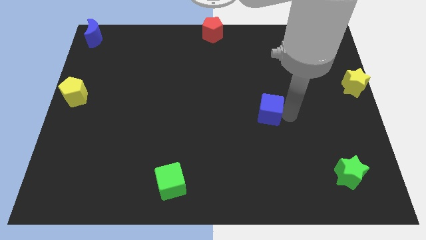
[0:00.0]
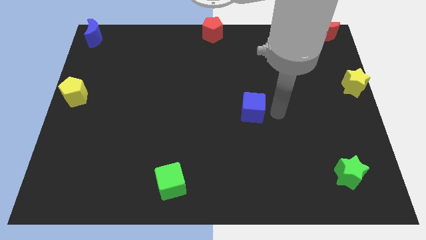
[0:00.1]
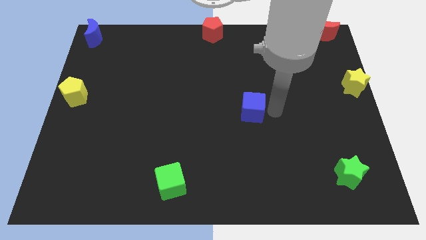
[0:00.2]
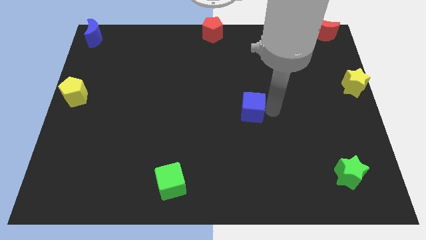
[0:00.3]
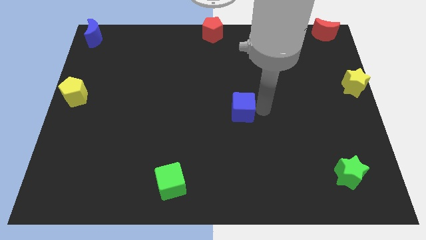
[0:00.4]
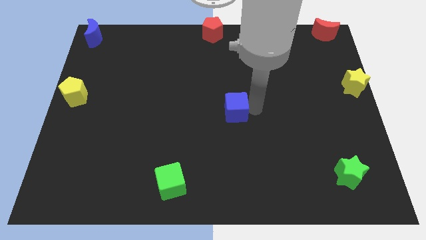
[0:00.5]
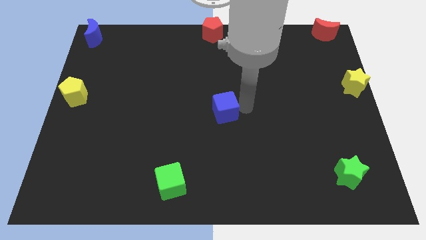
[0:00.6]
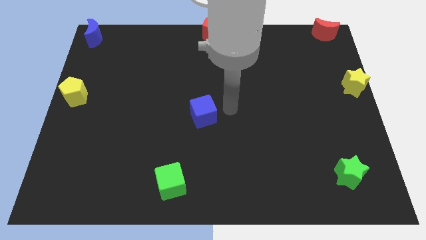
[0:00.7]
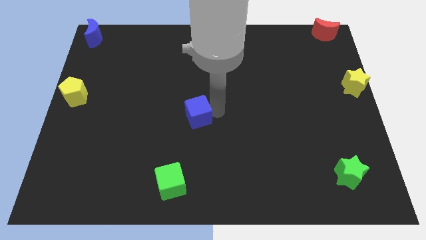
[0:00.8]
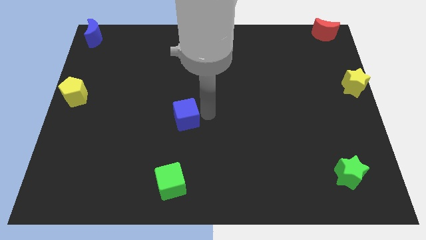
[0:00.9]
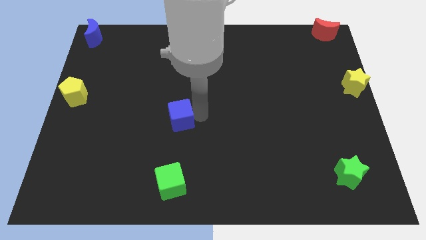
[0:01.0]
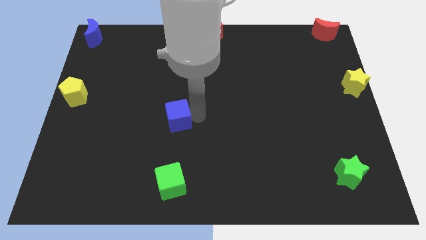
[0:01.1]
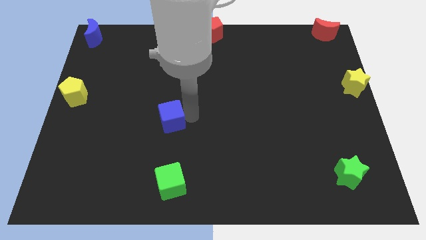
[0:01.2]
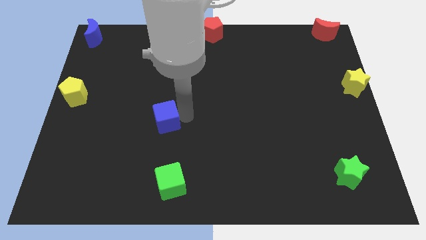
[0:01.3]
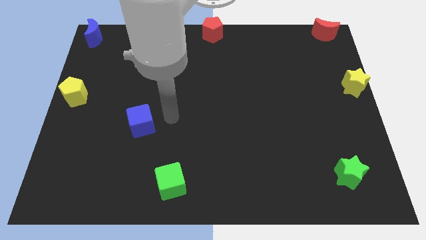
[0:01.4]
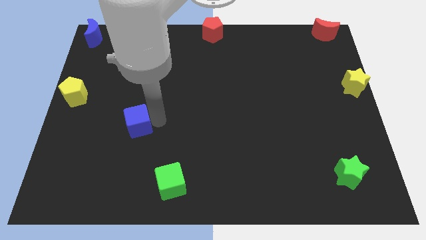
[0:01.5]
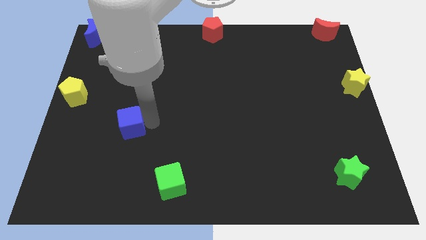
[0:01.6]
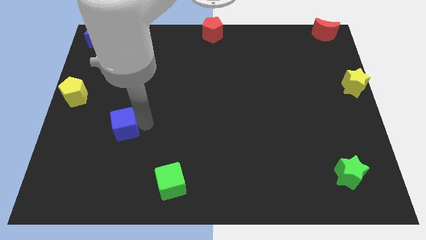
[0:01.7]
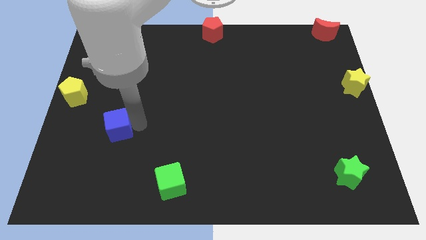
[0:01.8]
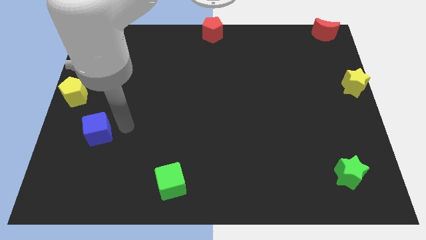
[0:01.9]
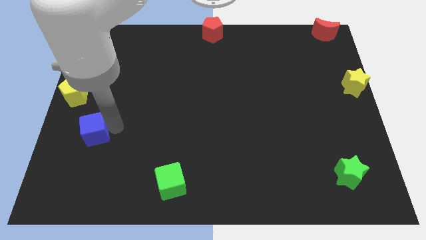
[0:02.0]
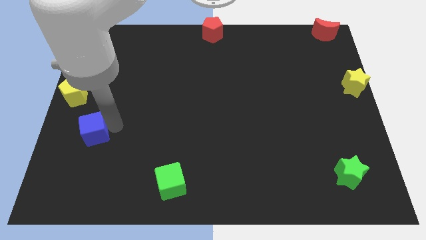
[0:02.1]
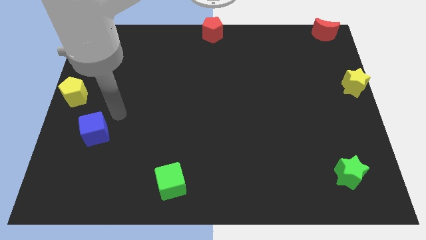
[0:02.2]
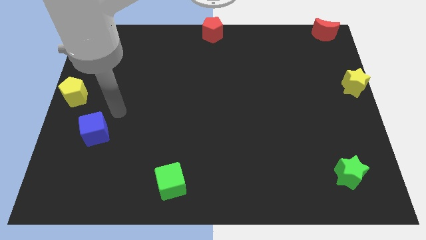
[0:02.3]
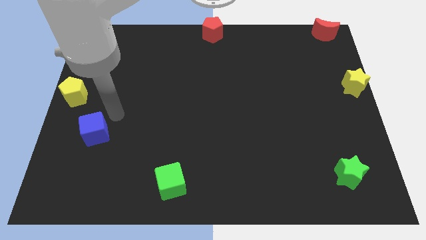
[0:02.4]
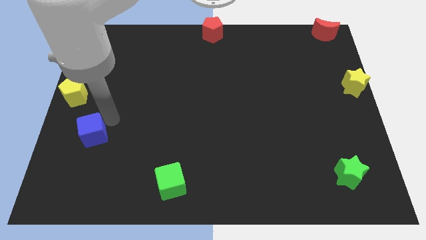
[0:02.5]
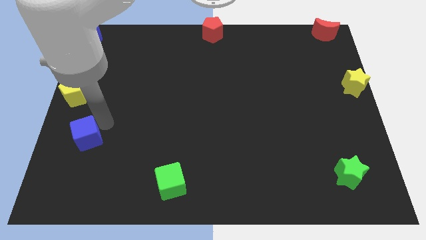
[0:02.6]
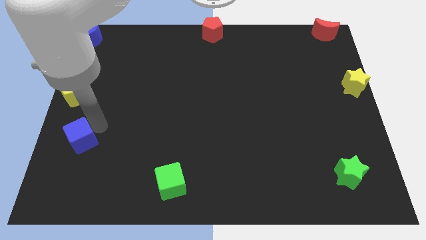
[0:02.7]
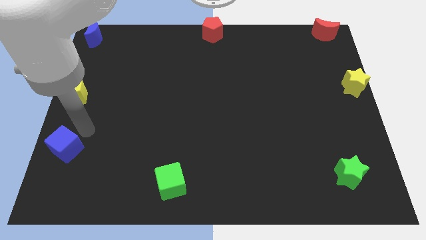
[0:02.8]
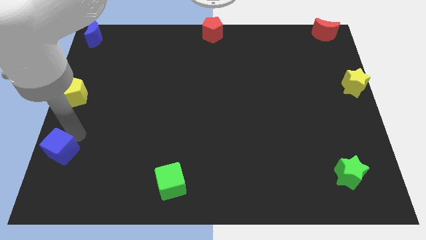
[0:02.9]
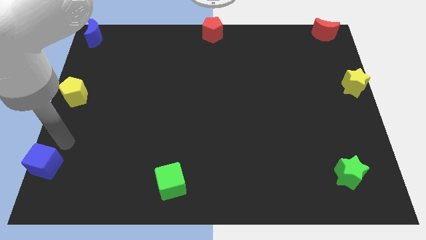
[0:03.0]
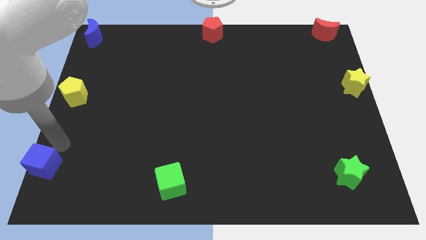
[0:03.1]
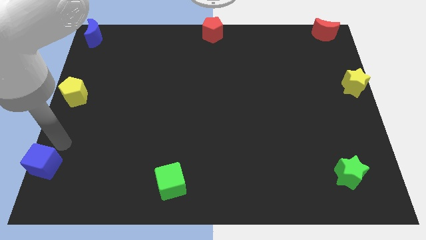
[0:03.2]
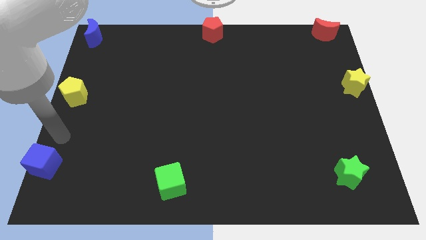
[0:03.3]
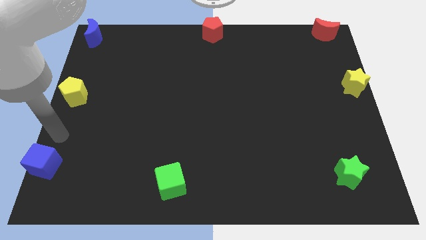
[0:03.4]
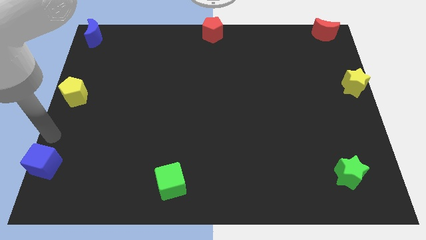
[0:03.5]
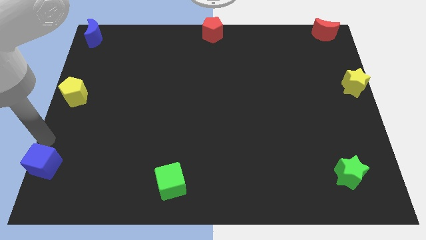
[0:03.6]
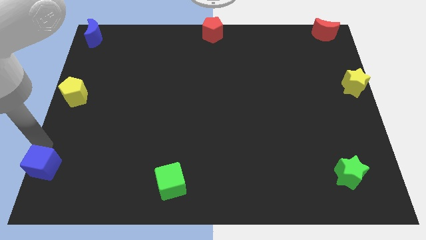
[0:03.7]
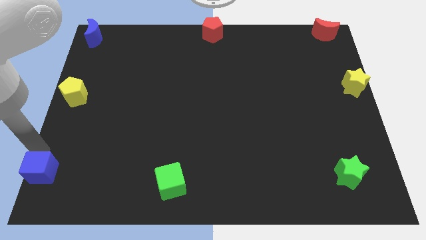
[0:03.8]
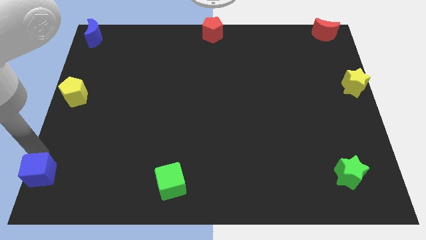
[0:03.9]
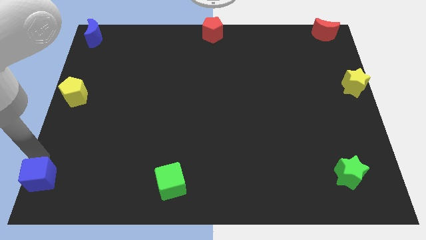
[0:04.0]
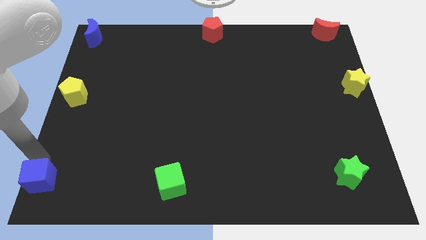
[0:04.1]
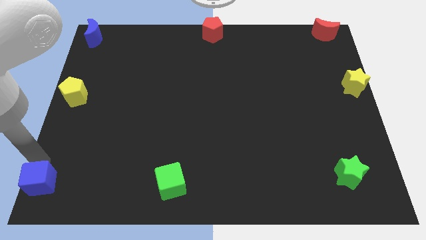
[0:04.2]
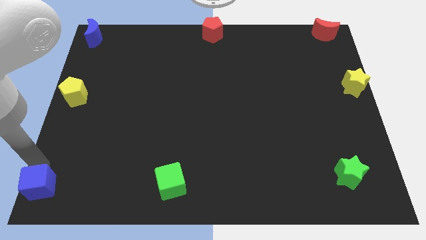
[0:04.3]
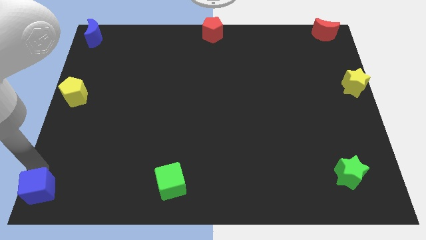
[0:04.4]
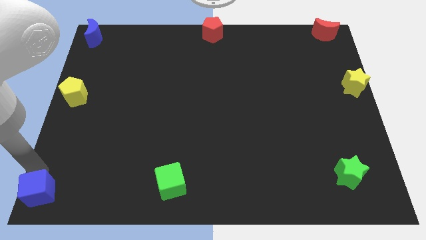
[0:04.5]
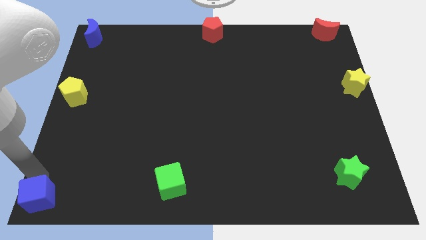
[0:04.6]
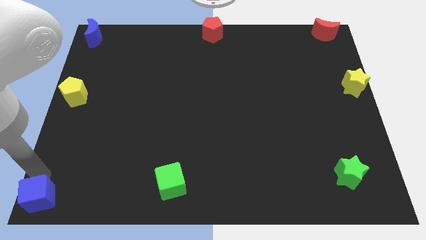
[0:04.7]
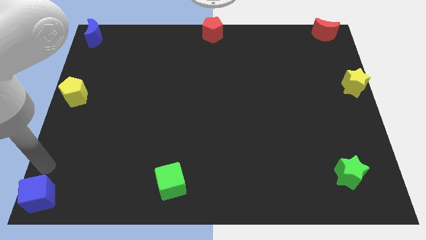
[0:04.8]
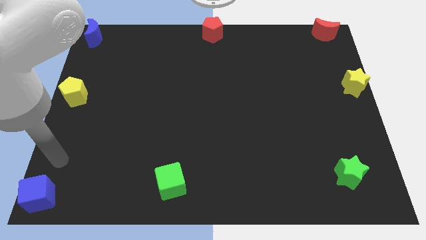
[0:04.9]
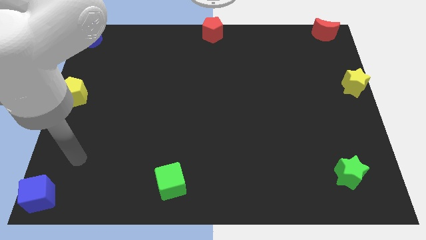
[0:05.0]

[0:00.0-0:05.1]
move blue cube to the bottom left corner of the board

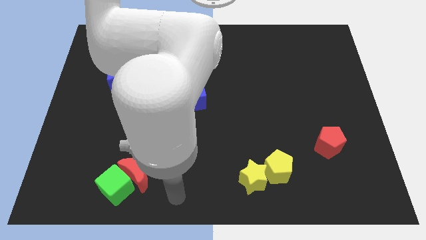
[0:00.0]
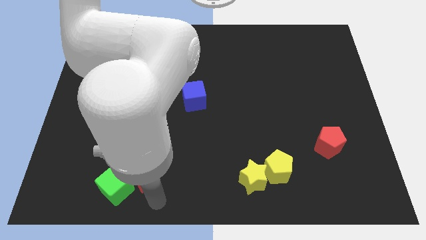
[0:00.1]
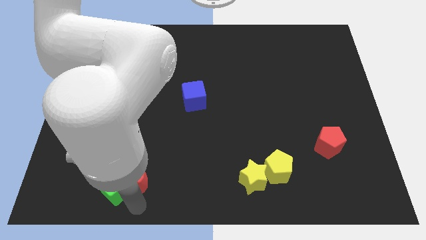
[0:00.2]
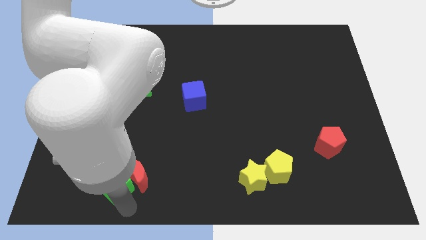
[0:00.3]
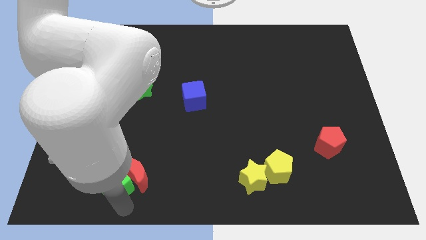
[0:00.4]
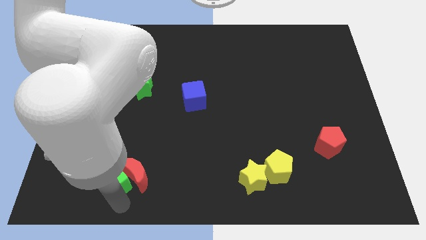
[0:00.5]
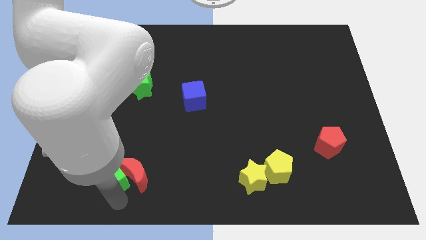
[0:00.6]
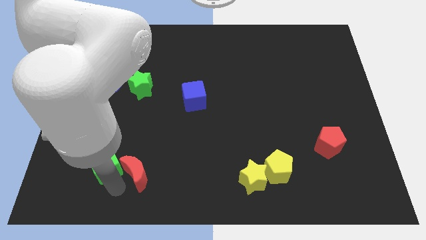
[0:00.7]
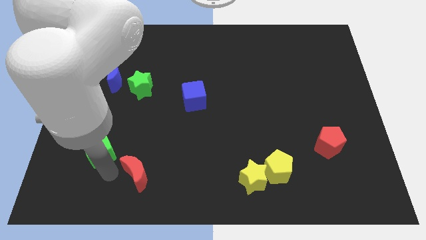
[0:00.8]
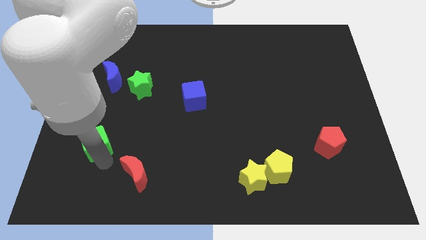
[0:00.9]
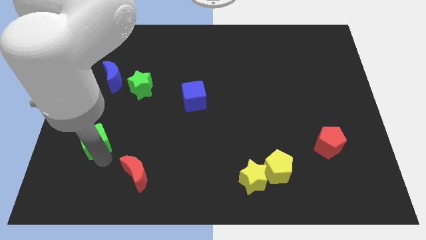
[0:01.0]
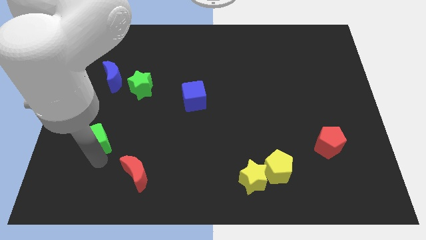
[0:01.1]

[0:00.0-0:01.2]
separate the red moon and green cube

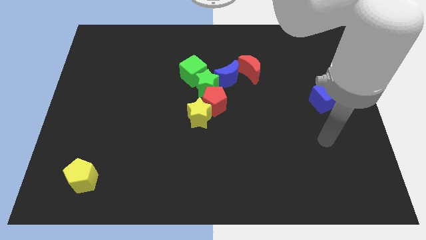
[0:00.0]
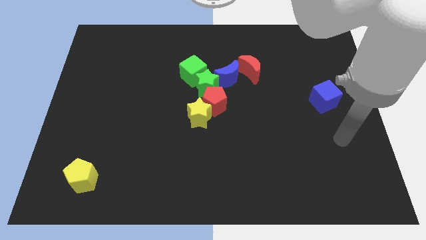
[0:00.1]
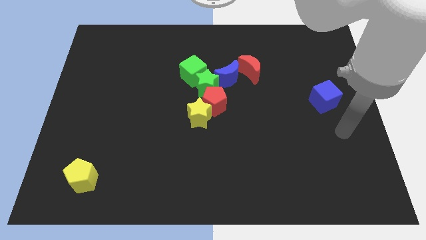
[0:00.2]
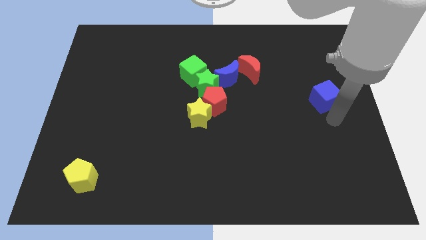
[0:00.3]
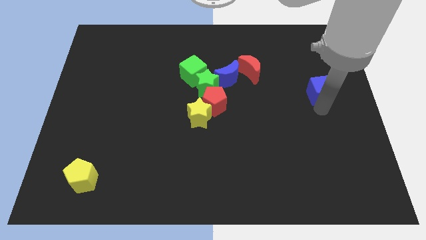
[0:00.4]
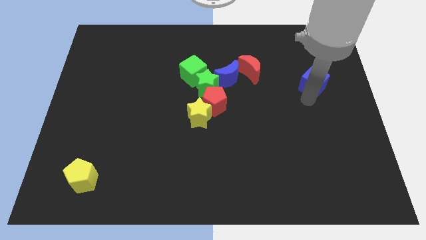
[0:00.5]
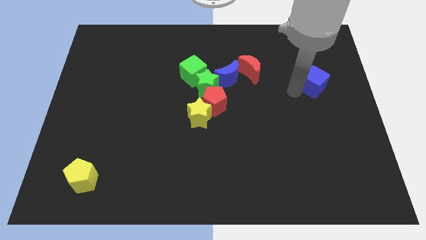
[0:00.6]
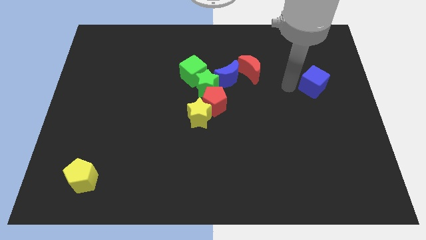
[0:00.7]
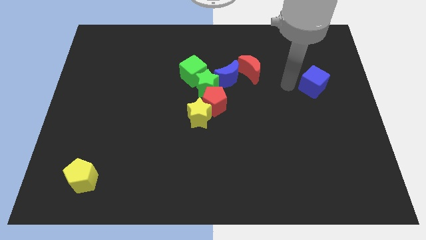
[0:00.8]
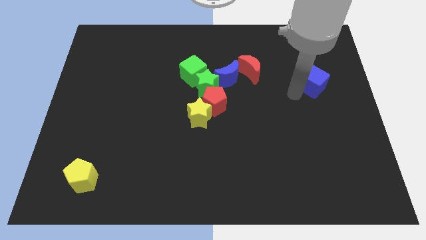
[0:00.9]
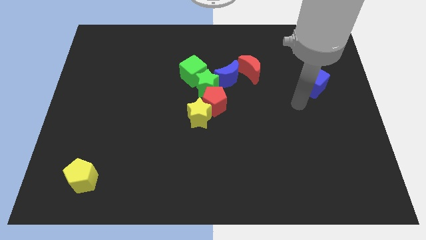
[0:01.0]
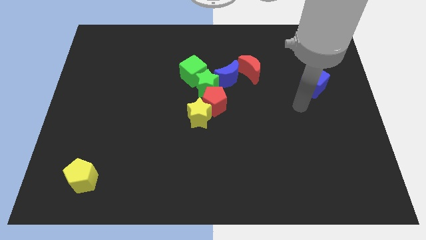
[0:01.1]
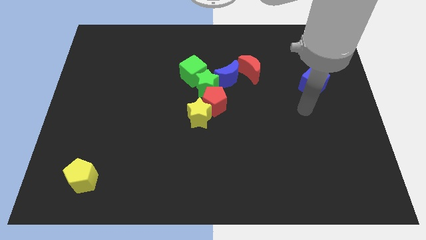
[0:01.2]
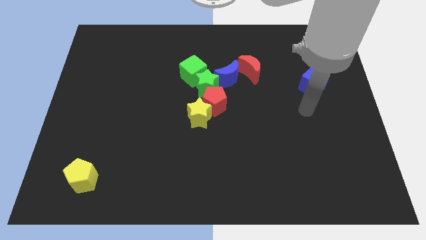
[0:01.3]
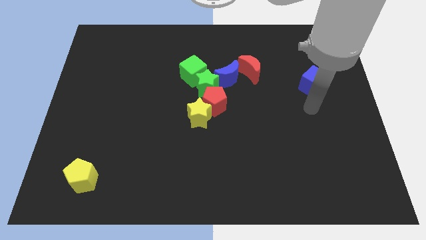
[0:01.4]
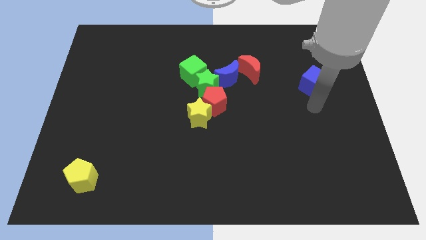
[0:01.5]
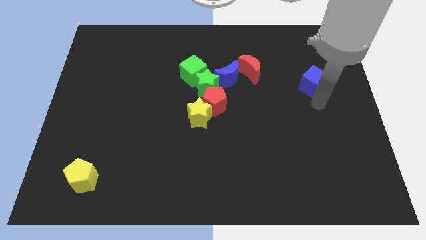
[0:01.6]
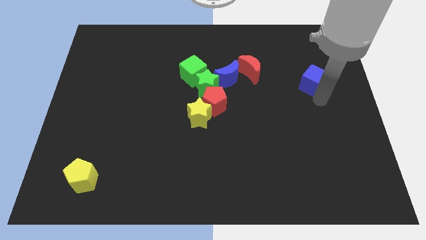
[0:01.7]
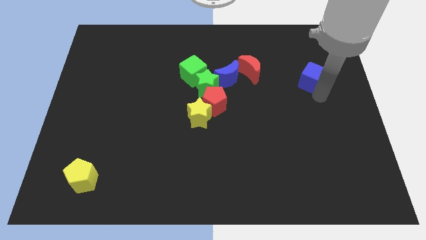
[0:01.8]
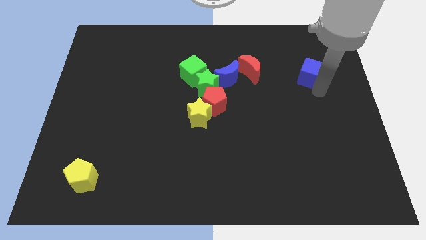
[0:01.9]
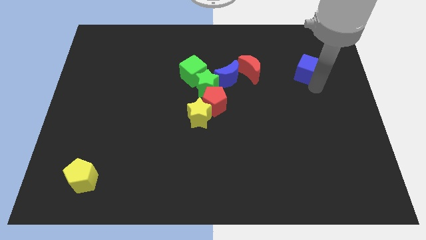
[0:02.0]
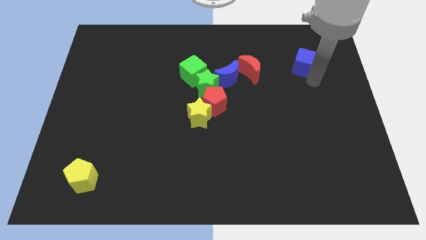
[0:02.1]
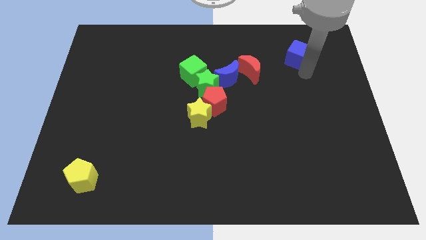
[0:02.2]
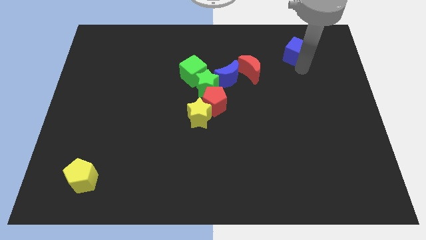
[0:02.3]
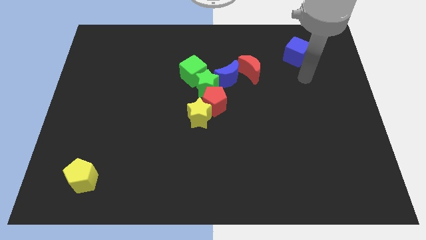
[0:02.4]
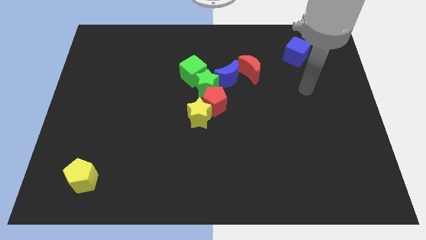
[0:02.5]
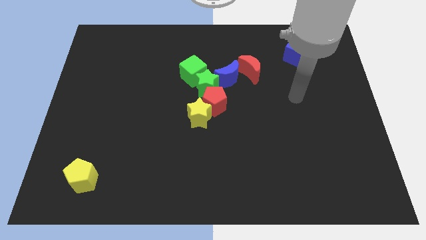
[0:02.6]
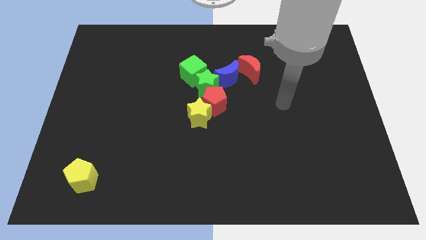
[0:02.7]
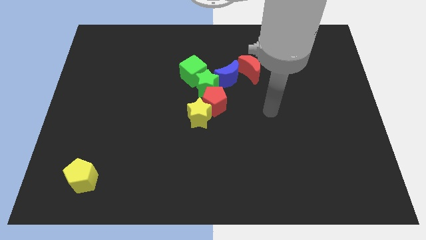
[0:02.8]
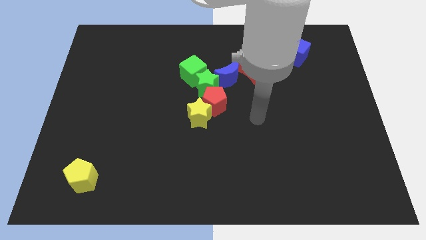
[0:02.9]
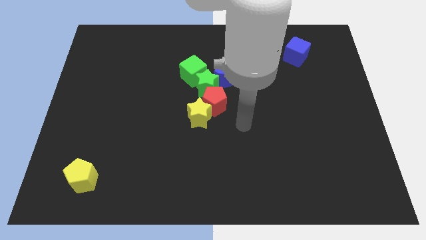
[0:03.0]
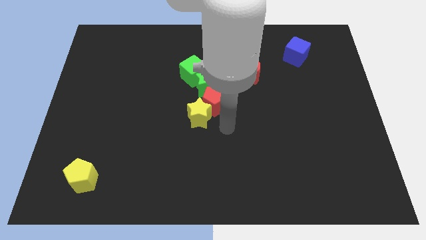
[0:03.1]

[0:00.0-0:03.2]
push the blue cube upward
